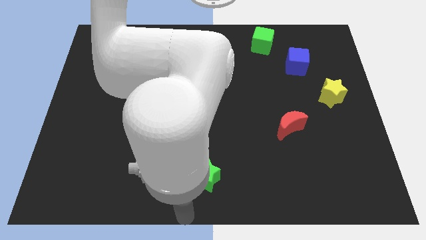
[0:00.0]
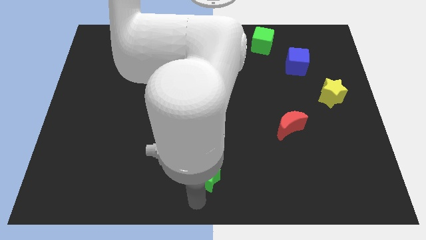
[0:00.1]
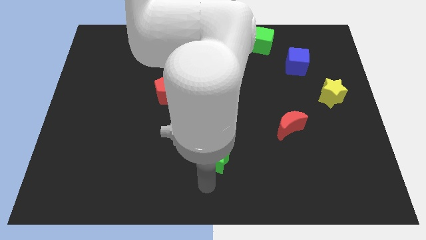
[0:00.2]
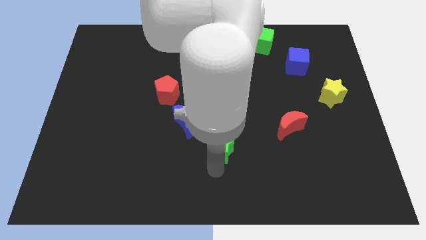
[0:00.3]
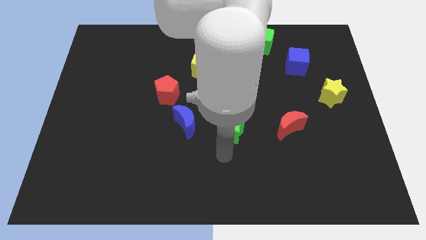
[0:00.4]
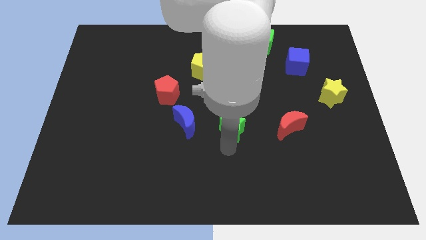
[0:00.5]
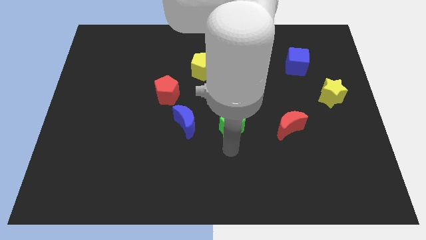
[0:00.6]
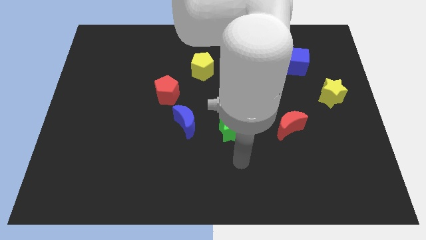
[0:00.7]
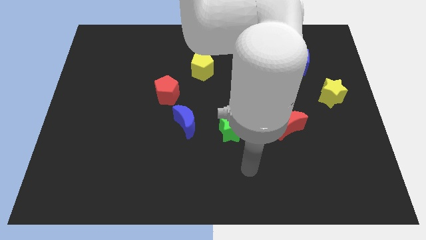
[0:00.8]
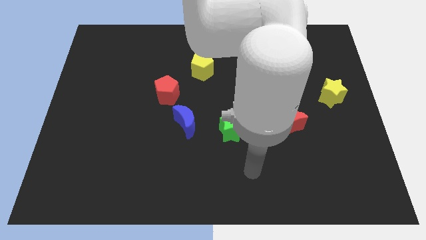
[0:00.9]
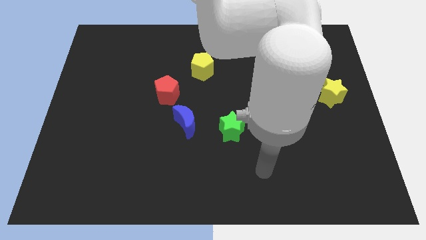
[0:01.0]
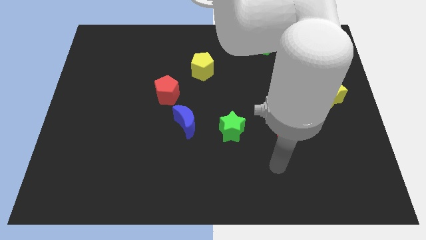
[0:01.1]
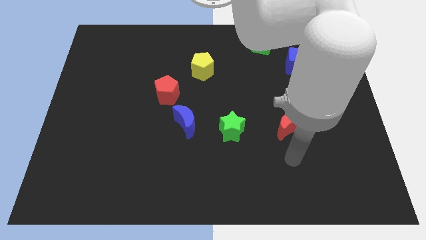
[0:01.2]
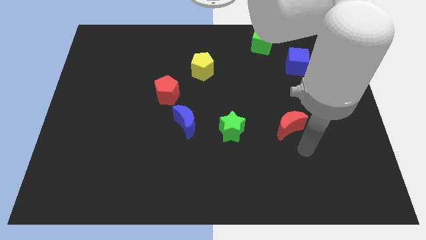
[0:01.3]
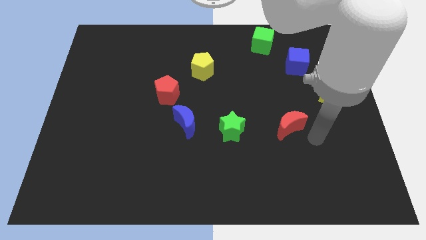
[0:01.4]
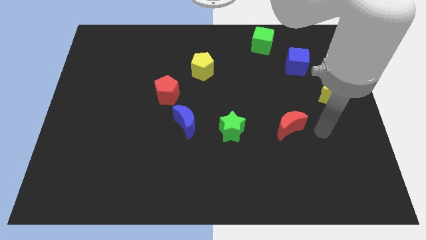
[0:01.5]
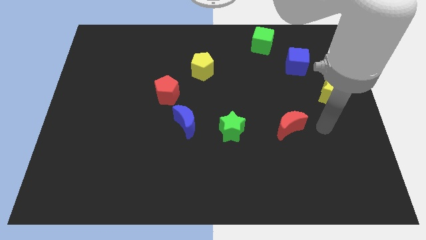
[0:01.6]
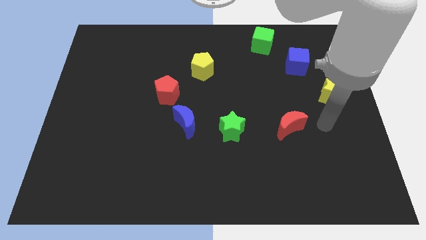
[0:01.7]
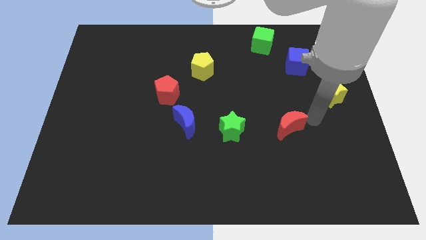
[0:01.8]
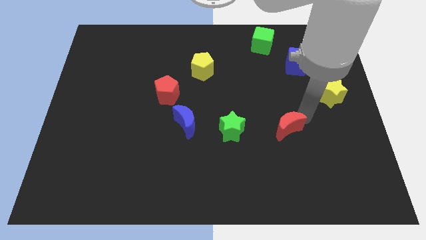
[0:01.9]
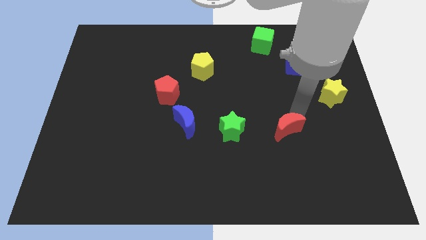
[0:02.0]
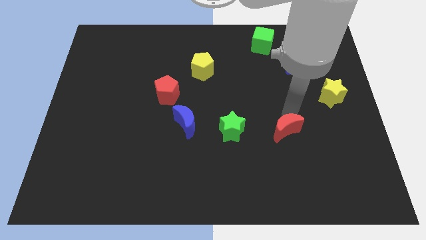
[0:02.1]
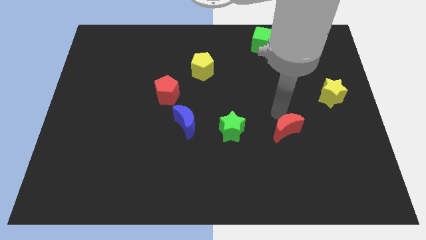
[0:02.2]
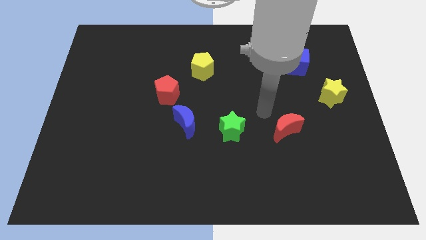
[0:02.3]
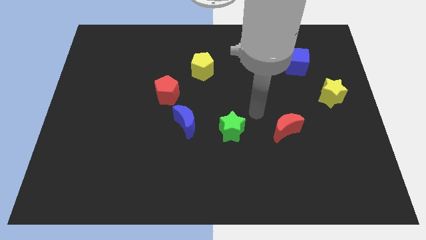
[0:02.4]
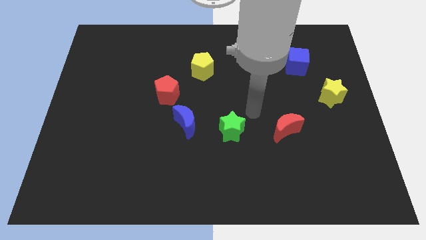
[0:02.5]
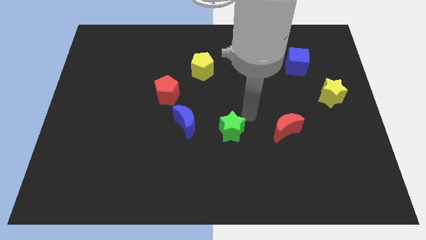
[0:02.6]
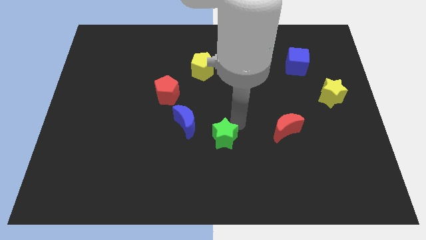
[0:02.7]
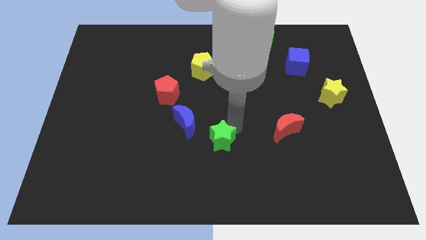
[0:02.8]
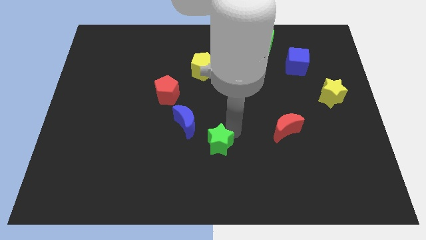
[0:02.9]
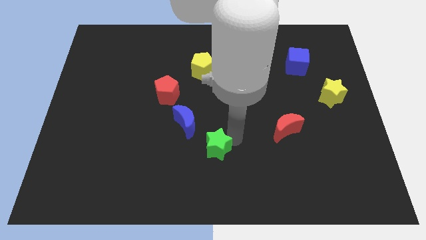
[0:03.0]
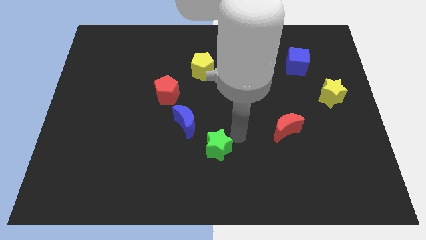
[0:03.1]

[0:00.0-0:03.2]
move the green star diagonal to the bottom right side of the blue crescent

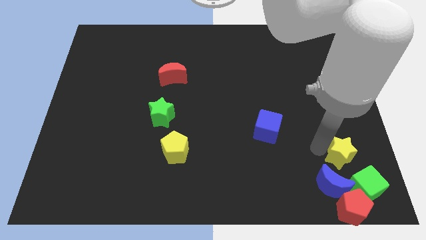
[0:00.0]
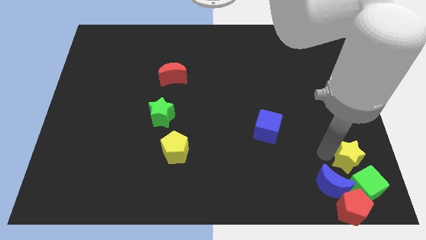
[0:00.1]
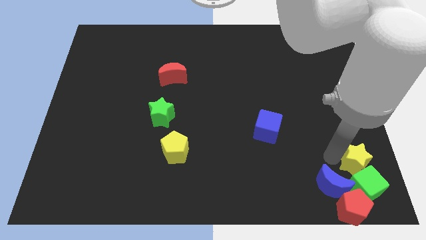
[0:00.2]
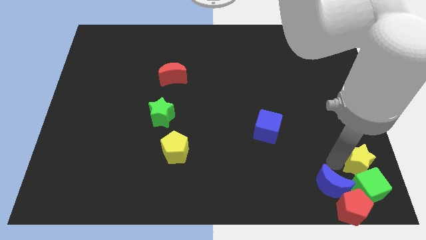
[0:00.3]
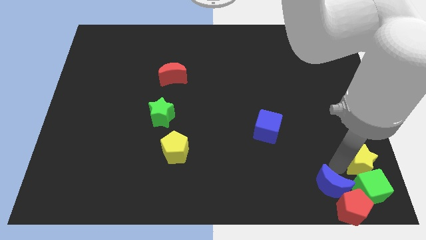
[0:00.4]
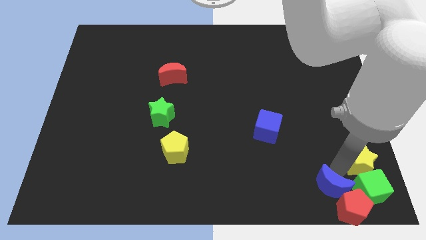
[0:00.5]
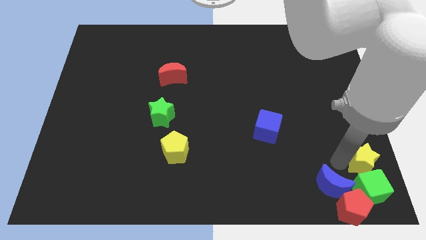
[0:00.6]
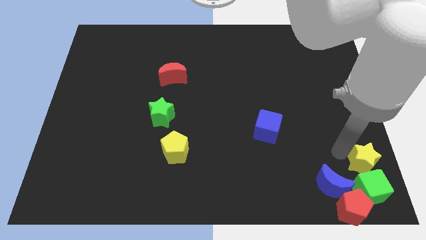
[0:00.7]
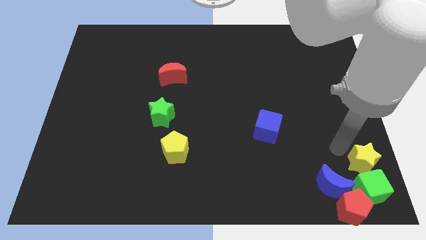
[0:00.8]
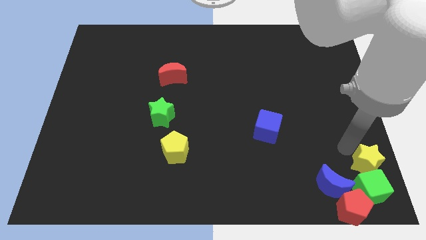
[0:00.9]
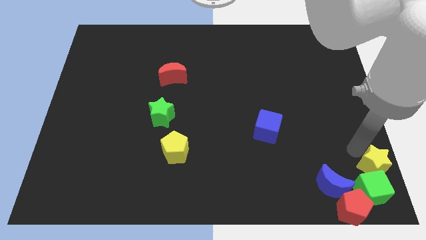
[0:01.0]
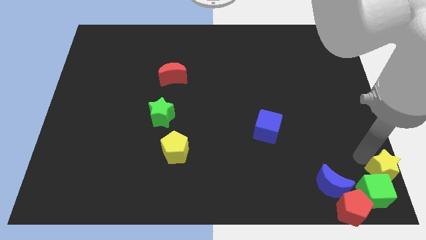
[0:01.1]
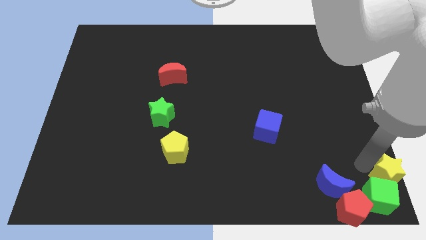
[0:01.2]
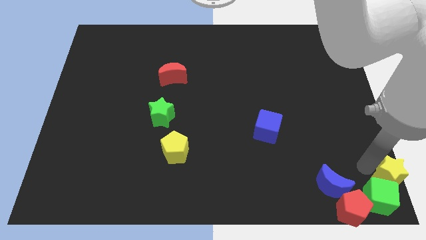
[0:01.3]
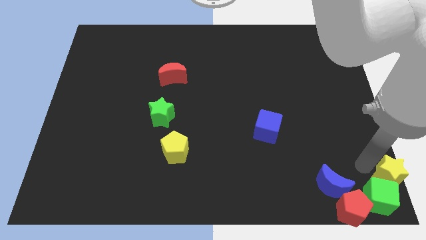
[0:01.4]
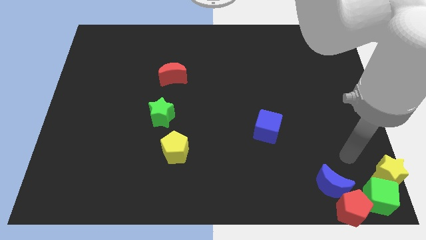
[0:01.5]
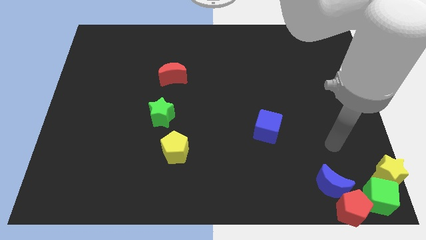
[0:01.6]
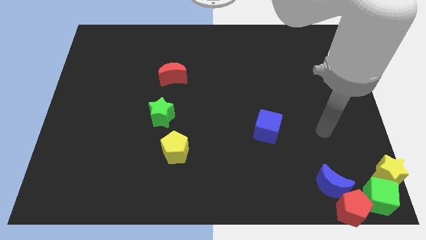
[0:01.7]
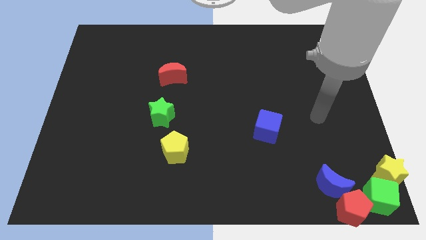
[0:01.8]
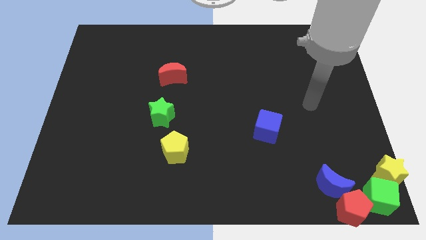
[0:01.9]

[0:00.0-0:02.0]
place the yellow star on top of the green cube

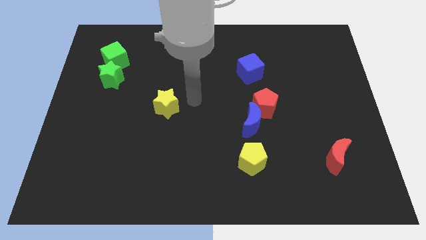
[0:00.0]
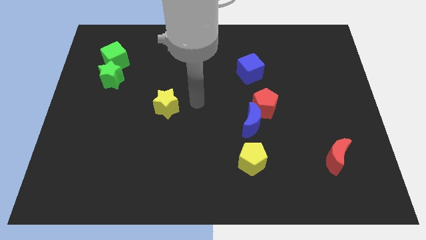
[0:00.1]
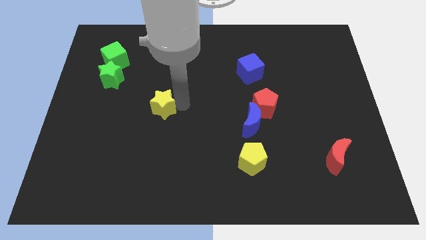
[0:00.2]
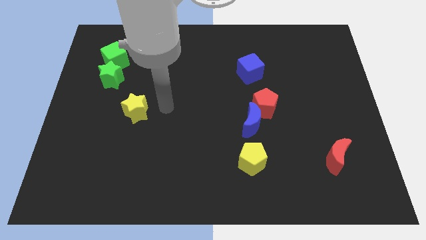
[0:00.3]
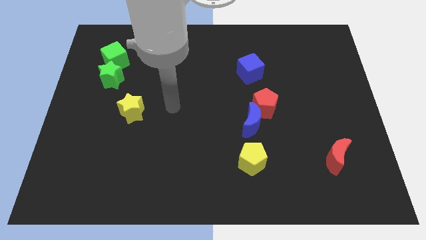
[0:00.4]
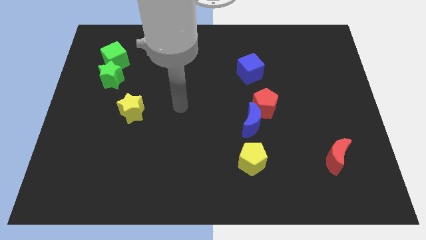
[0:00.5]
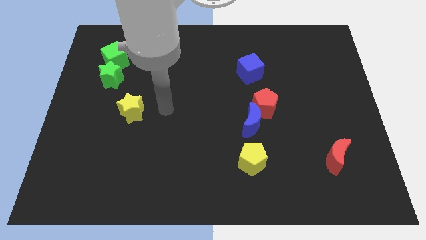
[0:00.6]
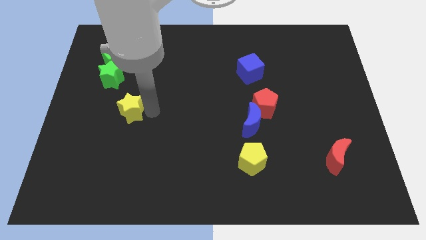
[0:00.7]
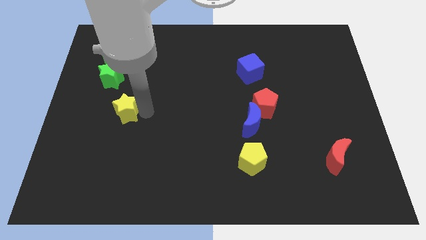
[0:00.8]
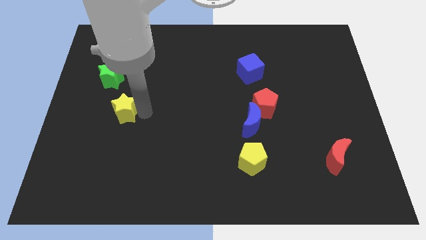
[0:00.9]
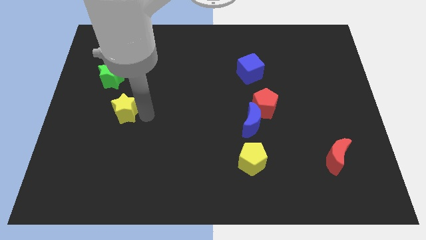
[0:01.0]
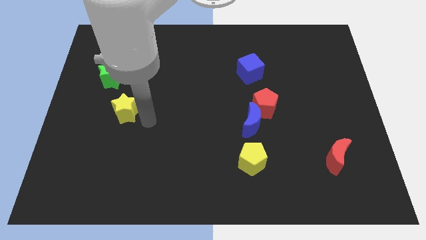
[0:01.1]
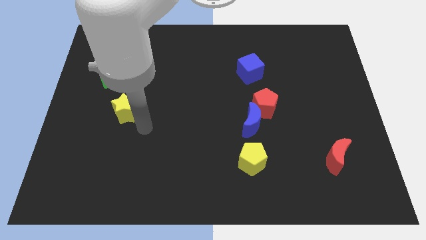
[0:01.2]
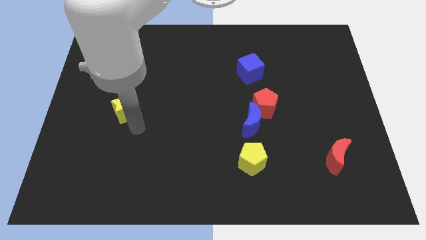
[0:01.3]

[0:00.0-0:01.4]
push the yellow star below the green star

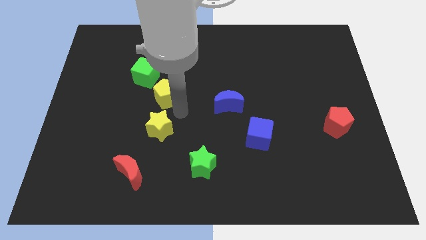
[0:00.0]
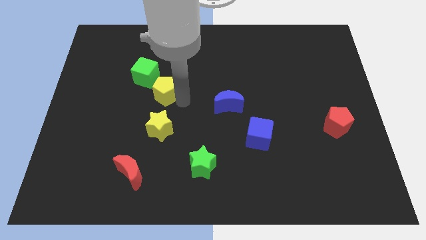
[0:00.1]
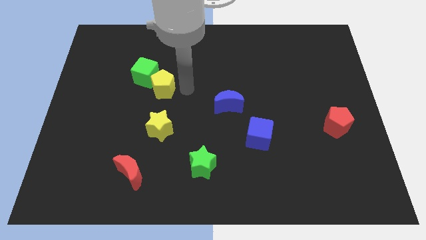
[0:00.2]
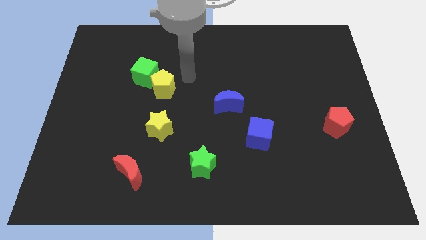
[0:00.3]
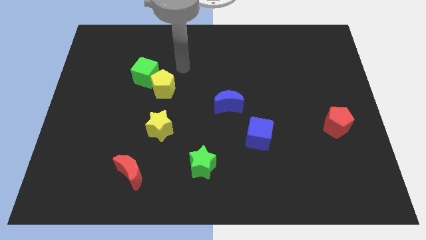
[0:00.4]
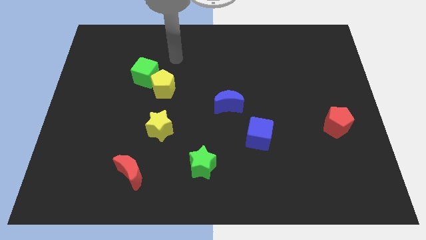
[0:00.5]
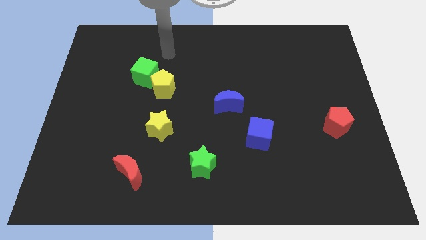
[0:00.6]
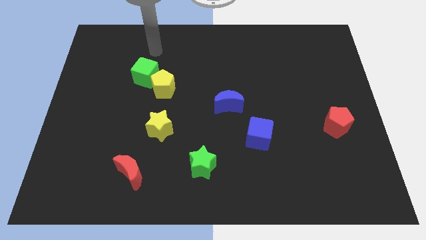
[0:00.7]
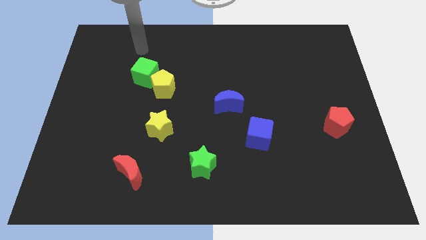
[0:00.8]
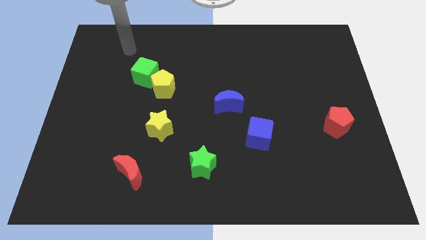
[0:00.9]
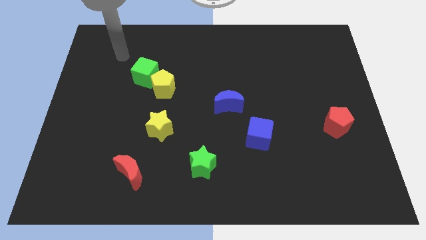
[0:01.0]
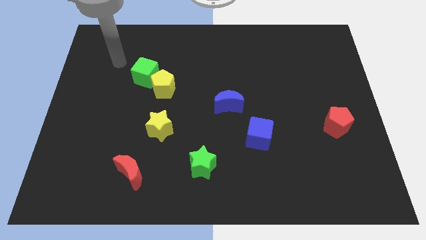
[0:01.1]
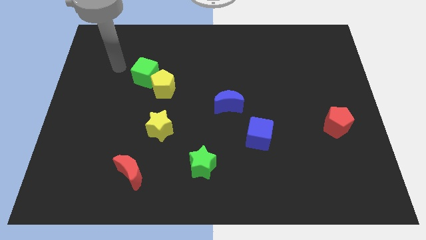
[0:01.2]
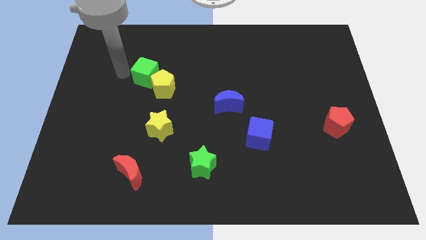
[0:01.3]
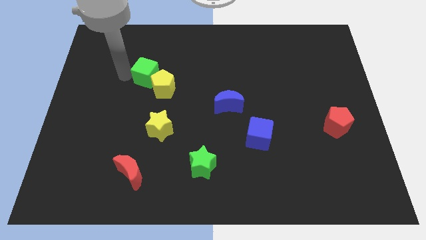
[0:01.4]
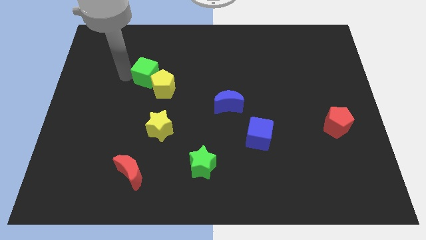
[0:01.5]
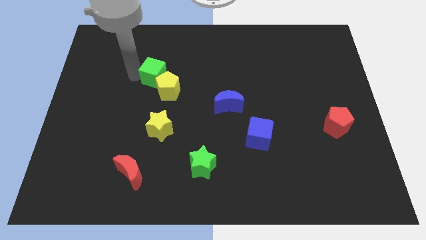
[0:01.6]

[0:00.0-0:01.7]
place the yellow pentagon at the bottom right side of green cube

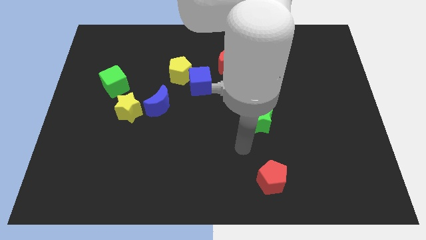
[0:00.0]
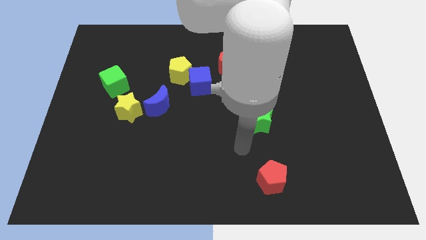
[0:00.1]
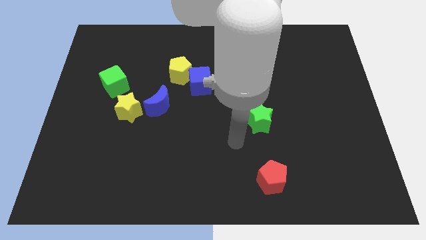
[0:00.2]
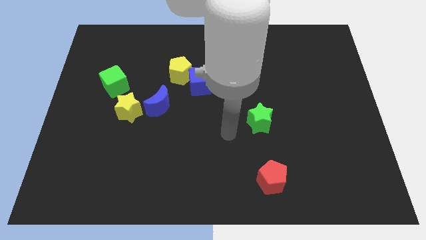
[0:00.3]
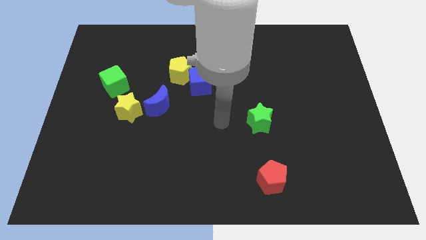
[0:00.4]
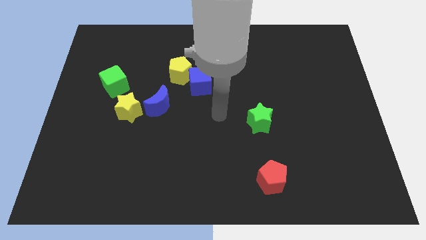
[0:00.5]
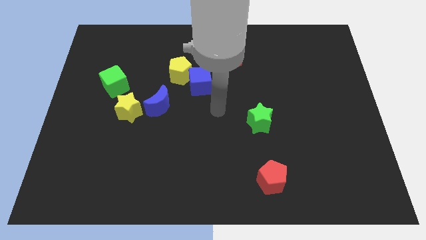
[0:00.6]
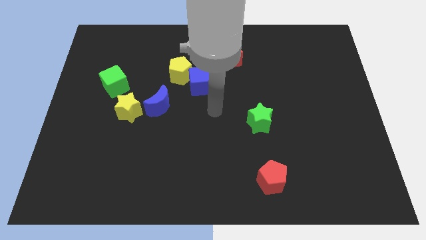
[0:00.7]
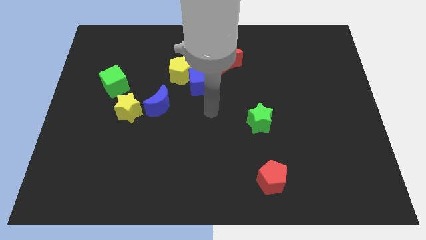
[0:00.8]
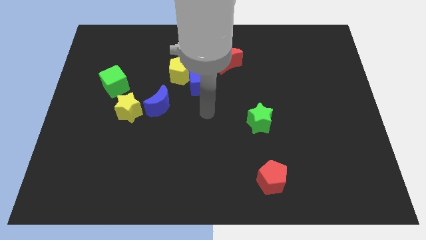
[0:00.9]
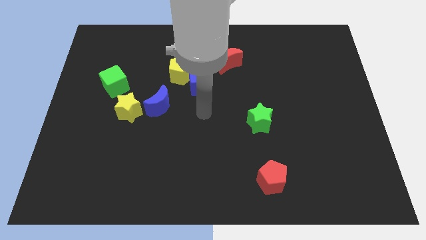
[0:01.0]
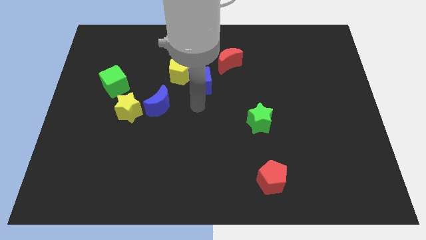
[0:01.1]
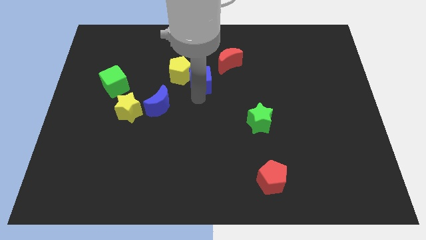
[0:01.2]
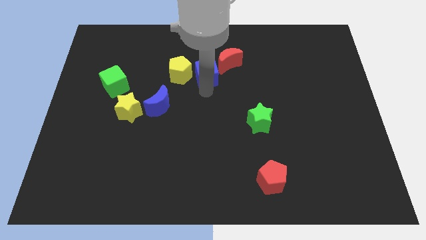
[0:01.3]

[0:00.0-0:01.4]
point your arm below blue cube
